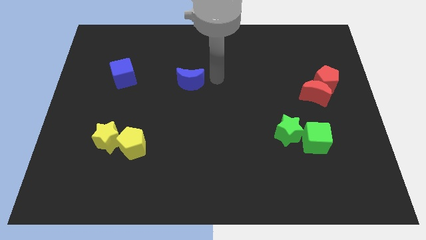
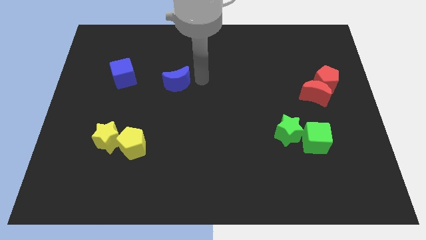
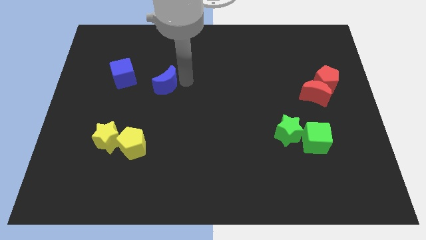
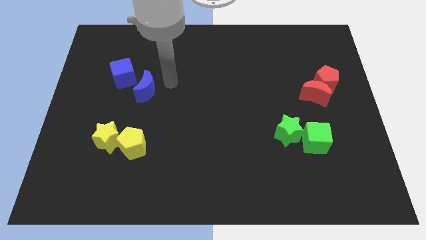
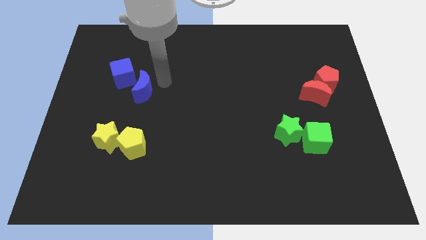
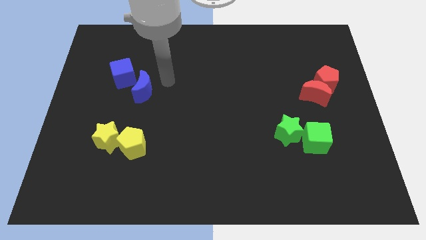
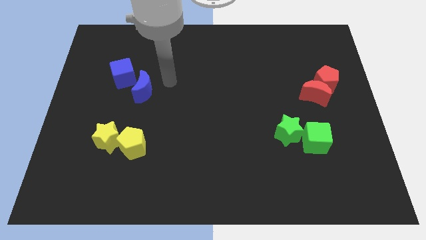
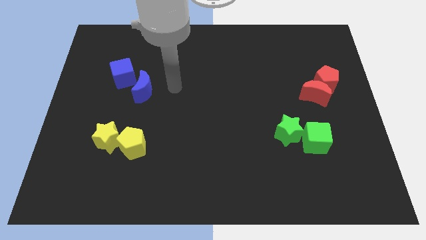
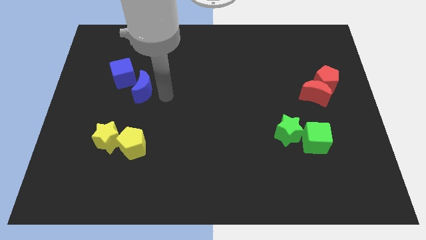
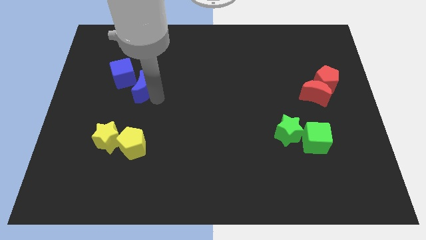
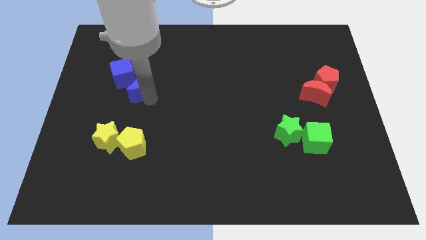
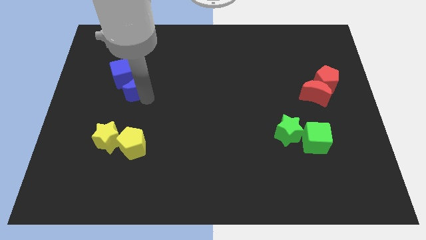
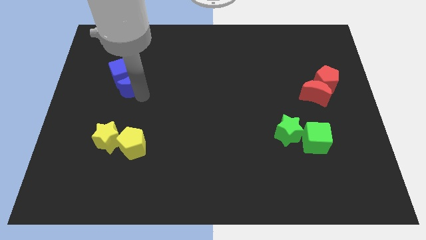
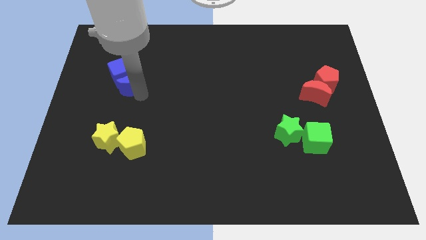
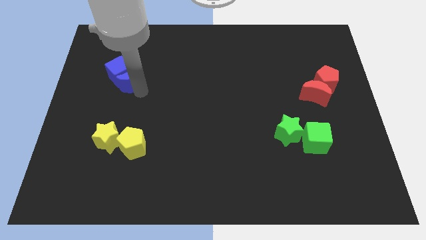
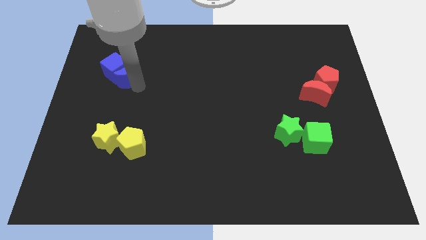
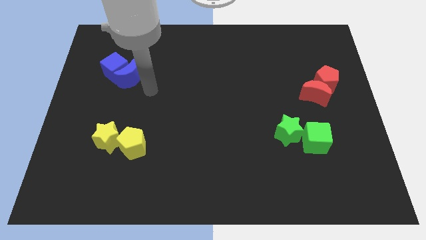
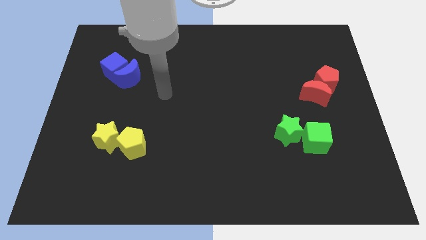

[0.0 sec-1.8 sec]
push the blue moon into the blue cube

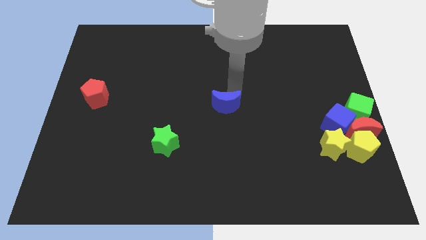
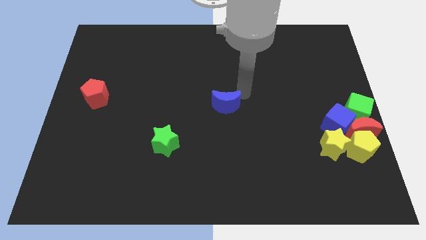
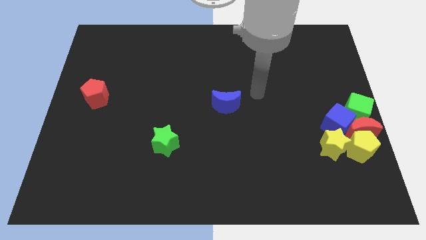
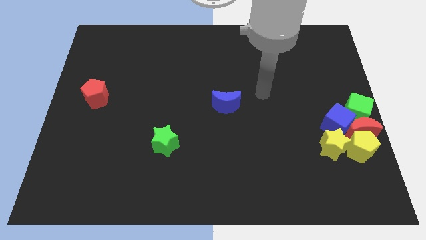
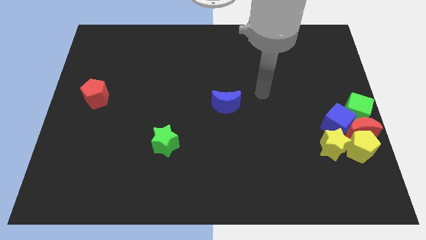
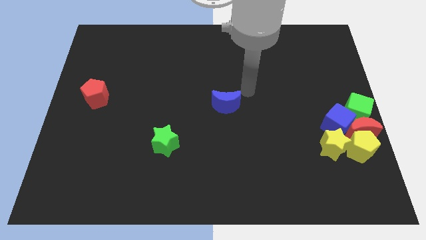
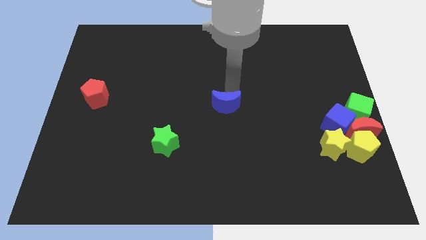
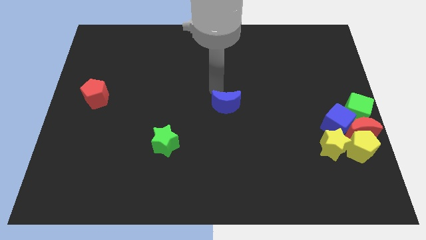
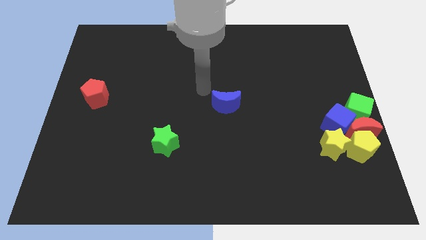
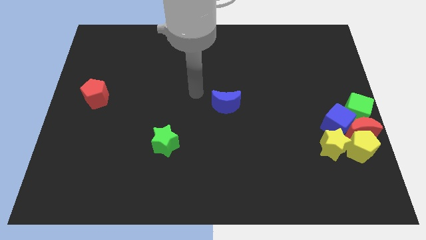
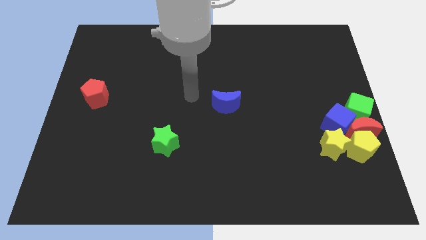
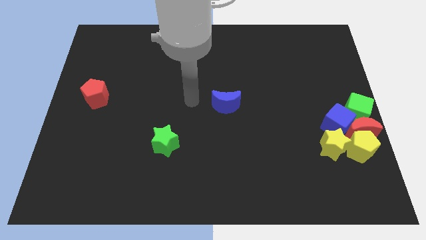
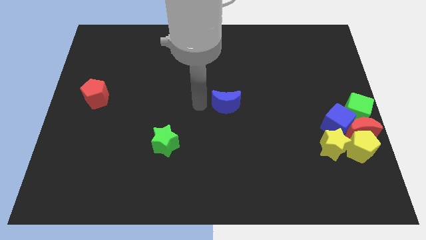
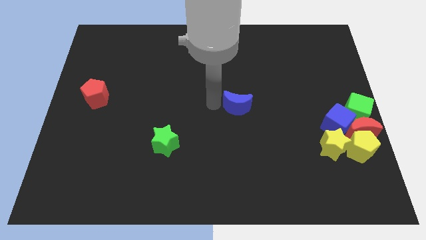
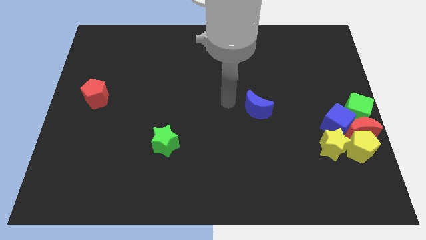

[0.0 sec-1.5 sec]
put the blue moon diagonally top right to green star

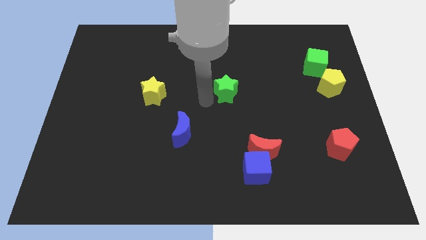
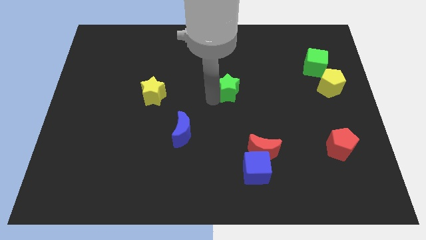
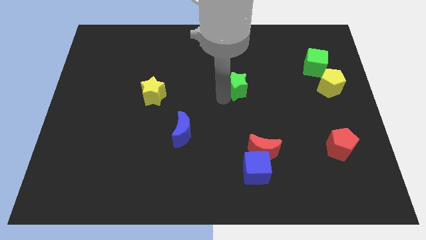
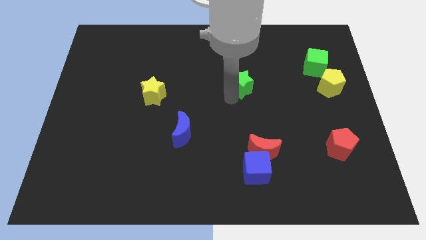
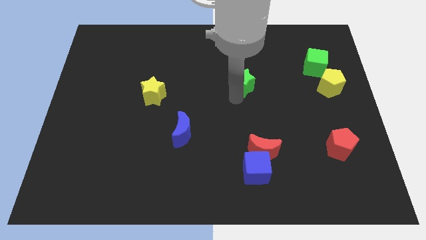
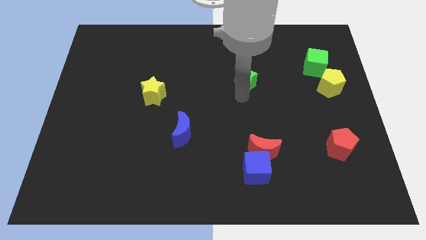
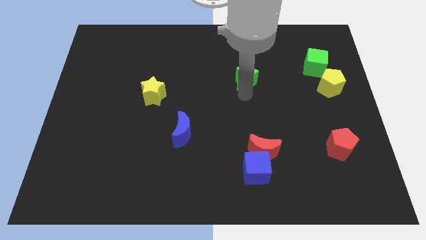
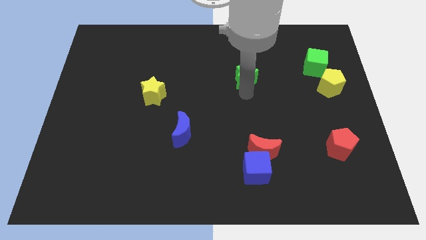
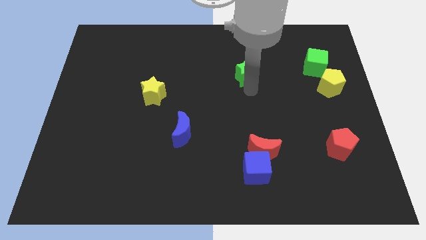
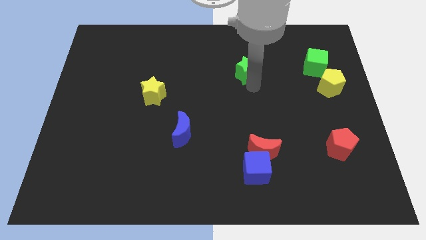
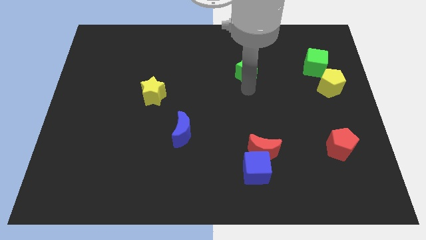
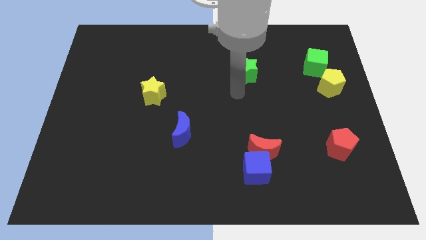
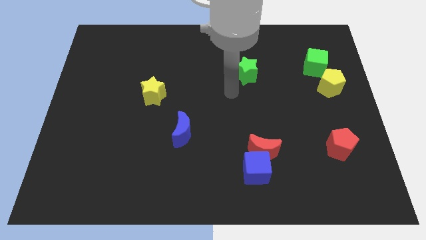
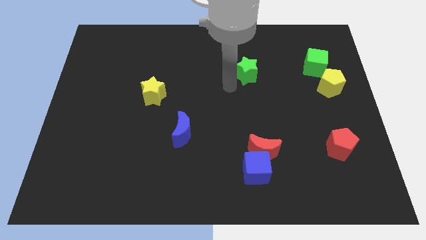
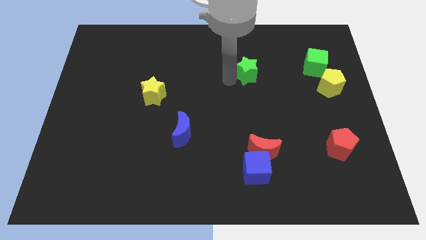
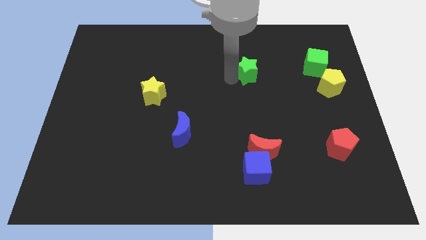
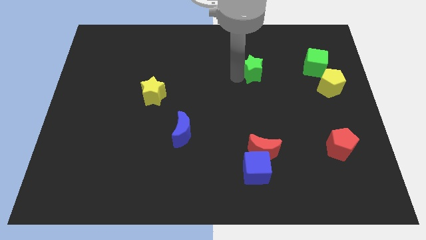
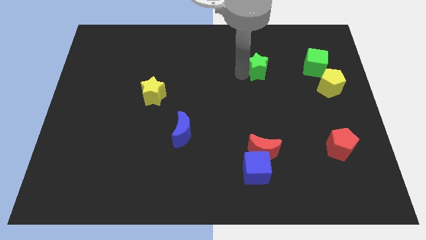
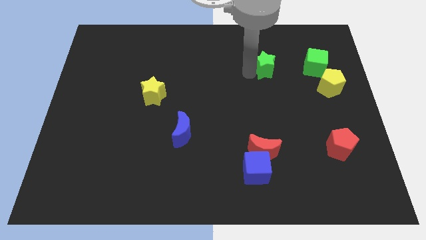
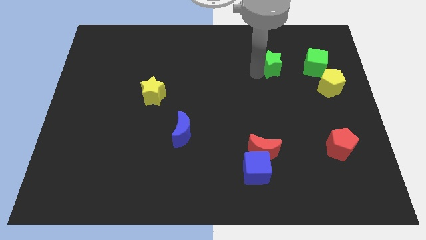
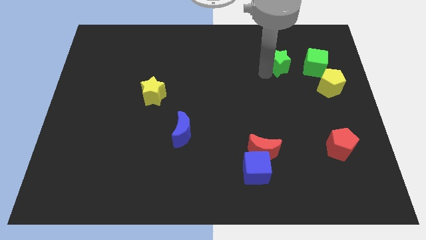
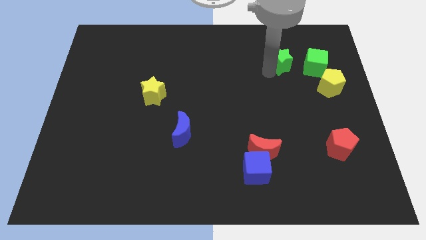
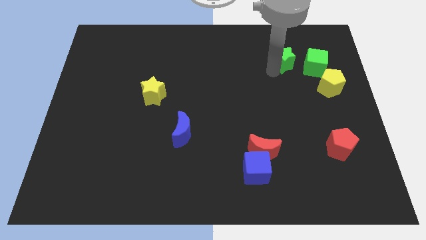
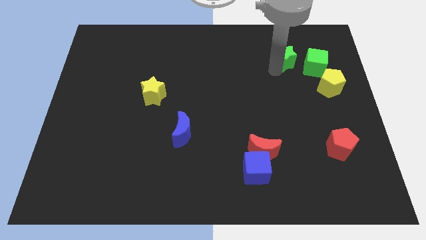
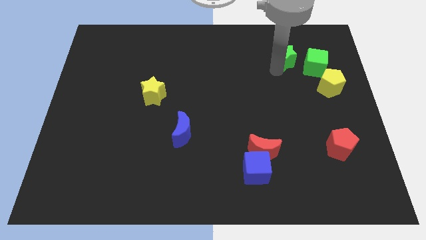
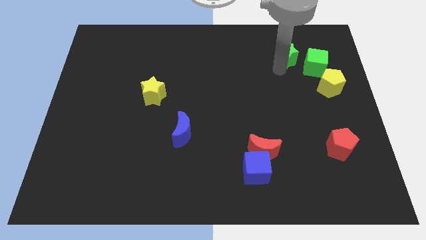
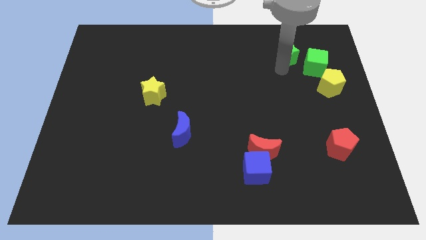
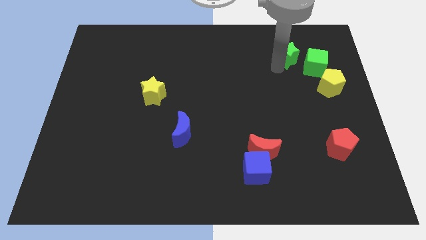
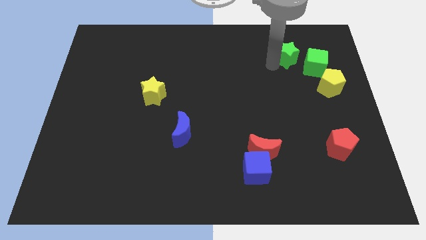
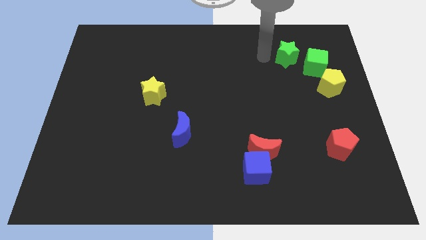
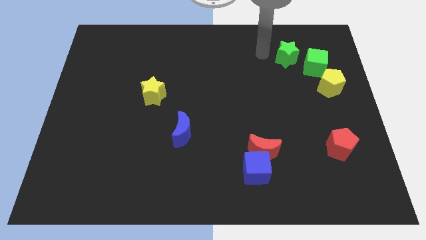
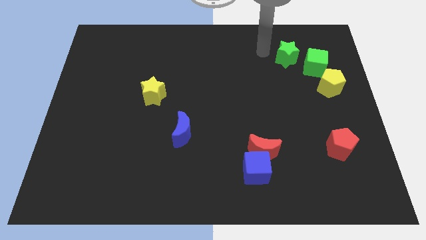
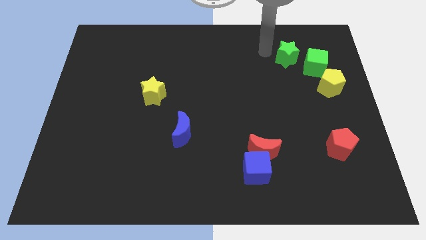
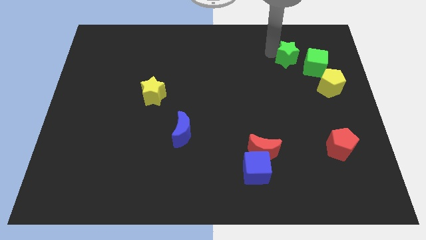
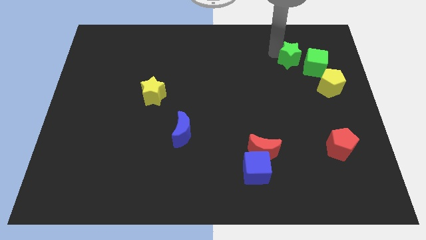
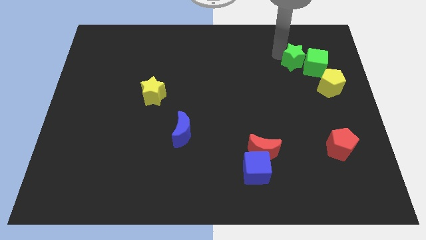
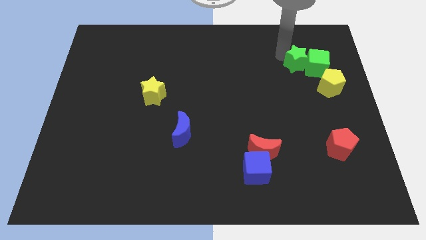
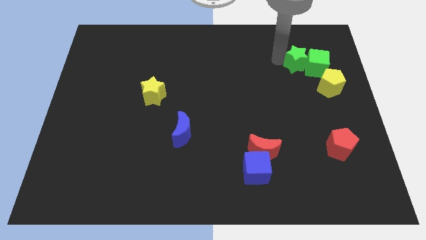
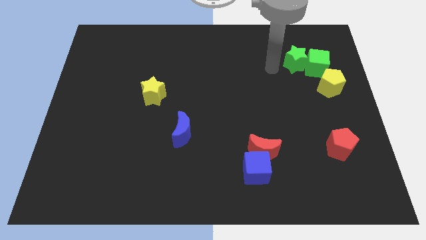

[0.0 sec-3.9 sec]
move the green star to the left of green cube

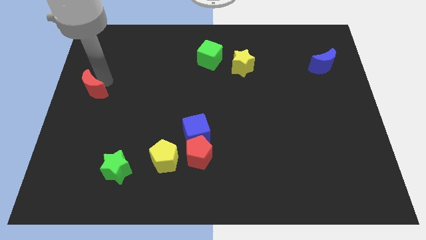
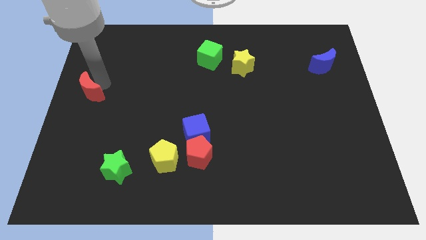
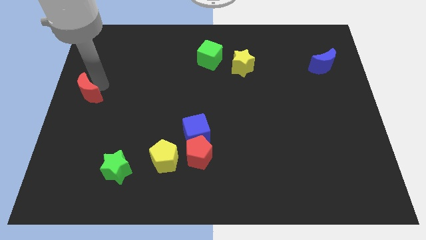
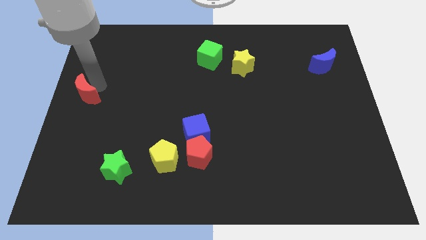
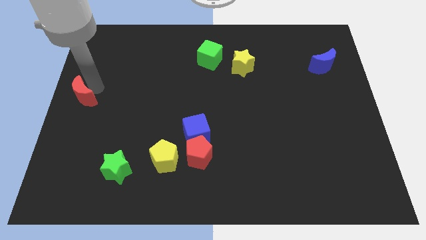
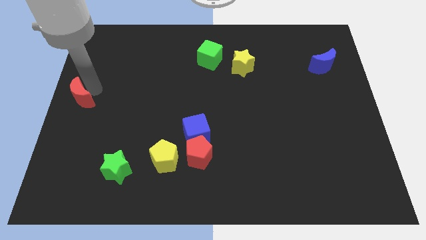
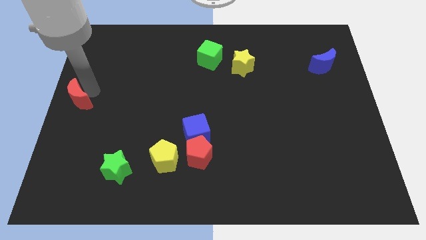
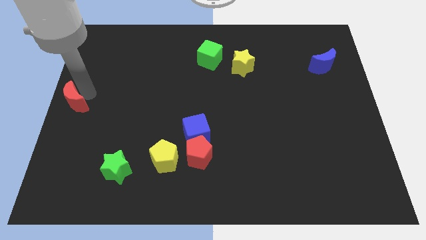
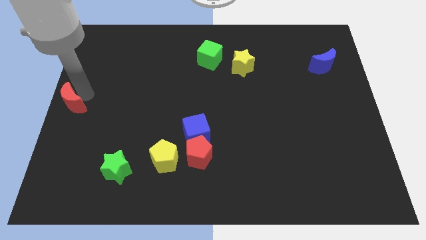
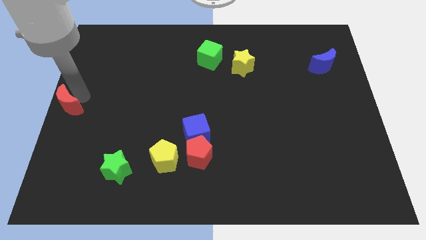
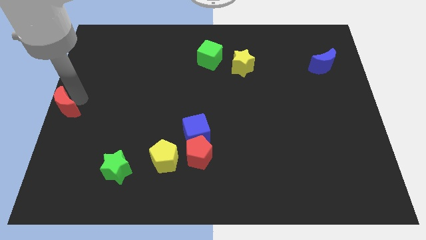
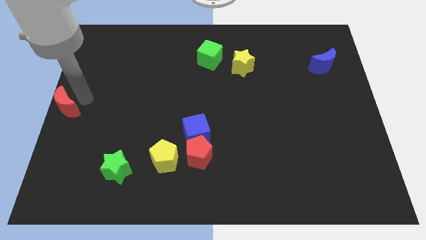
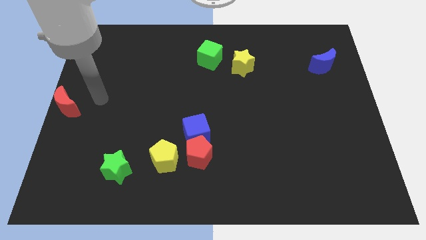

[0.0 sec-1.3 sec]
move the red crescent to the left center of the board

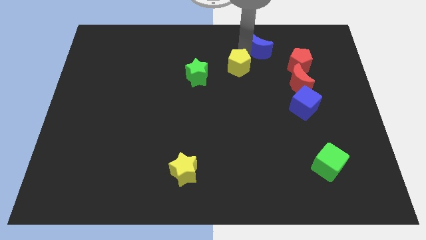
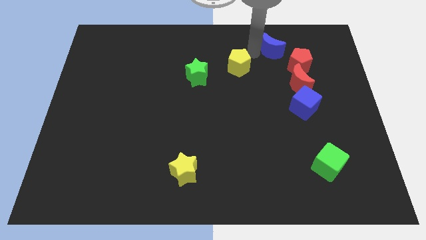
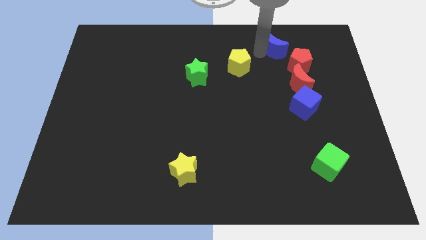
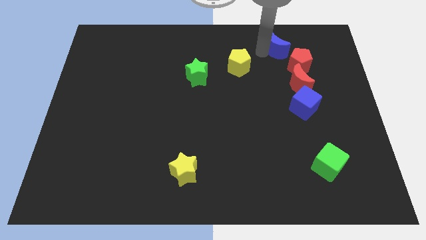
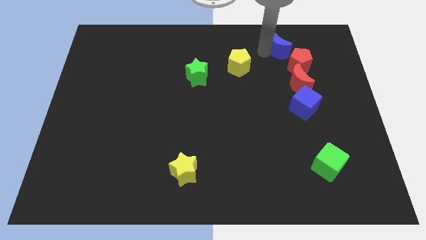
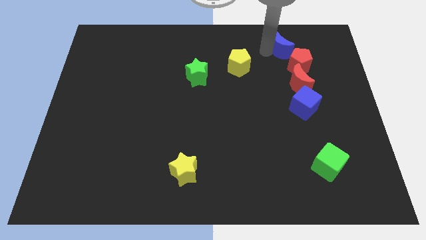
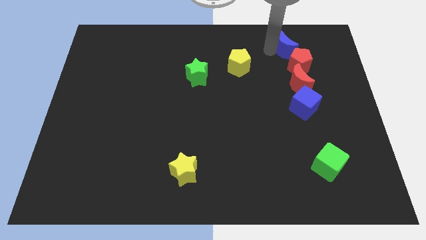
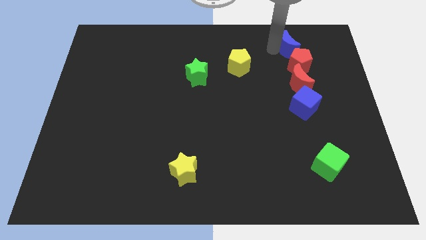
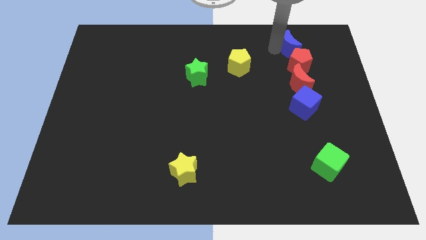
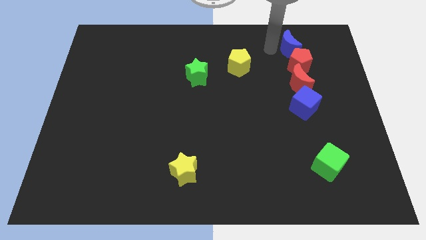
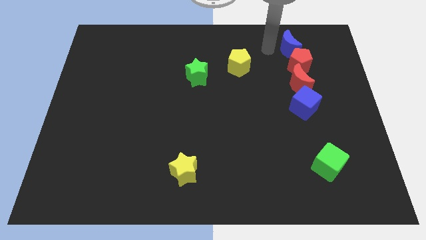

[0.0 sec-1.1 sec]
place the blue crescent on top of red pentagon
